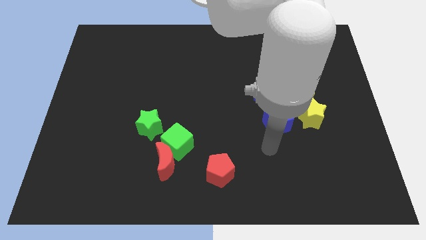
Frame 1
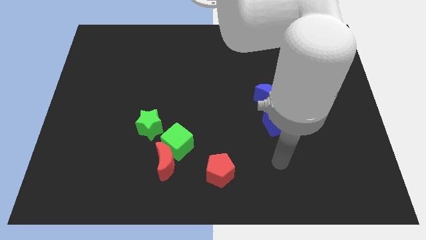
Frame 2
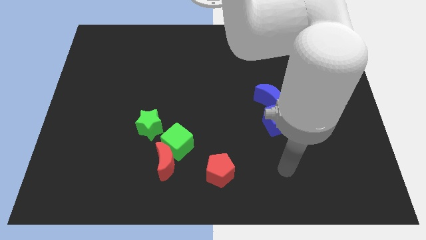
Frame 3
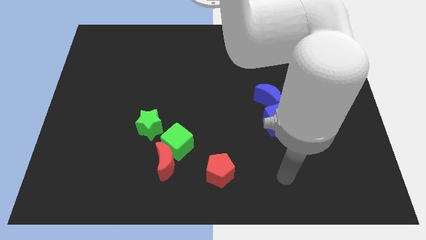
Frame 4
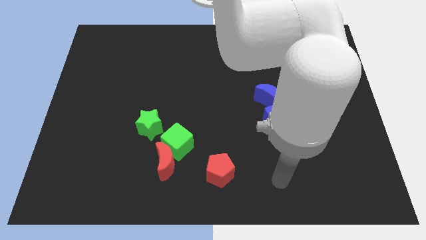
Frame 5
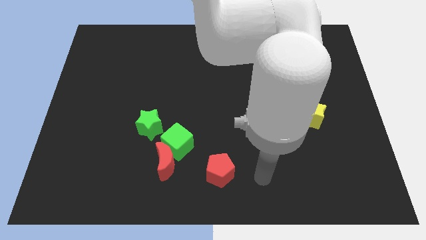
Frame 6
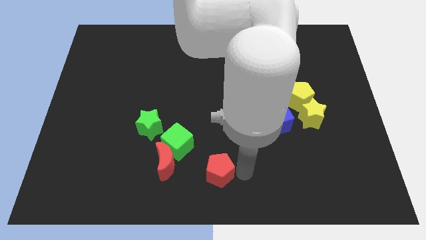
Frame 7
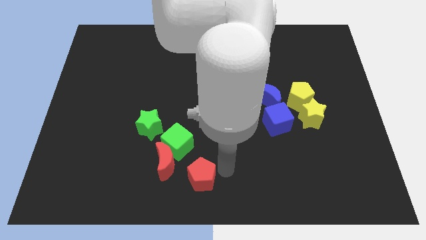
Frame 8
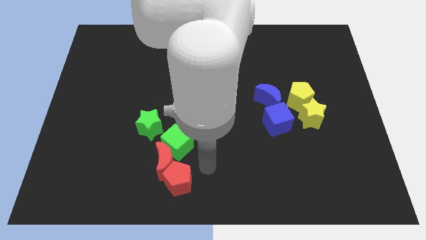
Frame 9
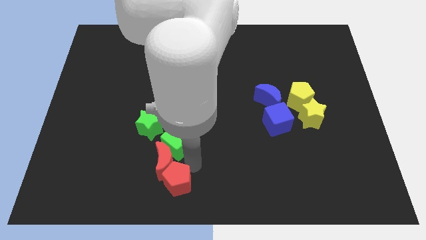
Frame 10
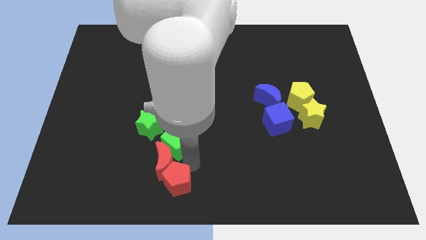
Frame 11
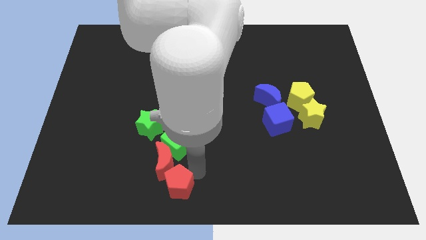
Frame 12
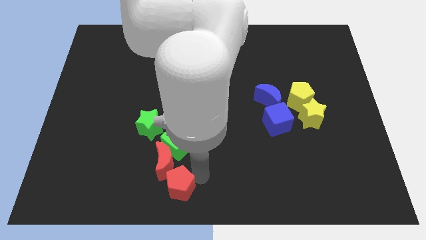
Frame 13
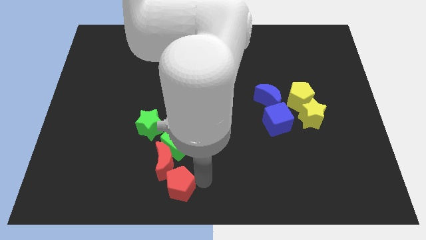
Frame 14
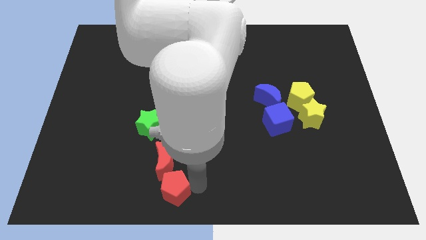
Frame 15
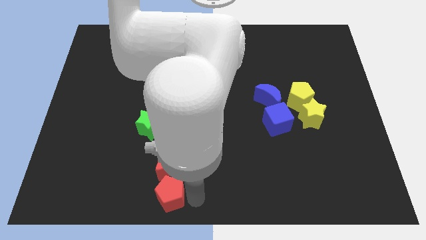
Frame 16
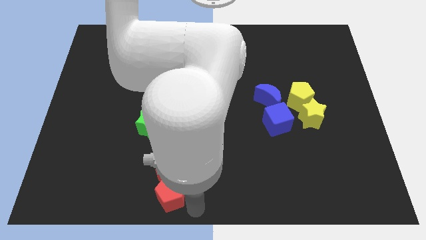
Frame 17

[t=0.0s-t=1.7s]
push the red pentagon towards the red moon

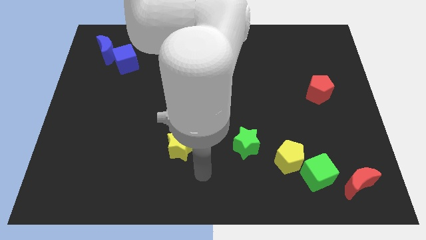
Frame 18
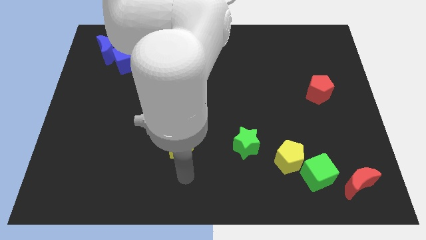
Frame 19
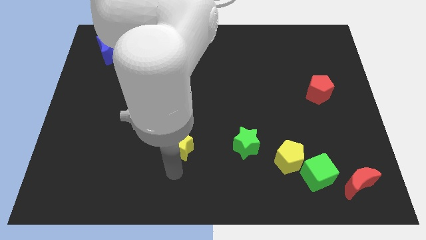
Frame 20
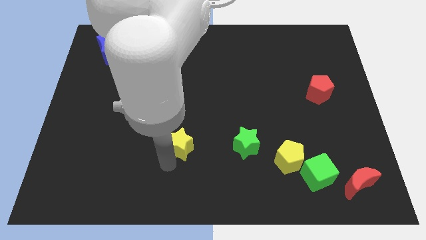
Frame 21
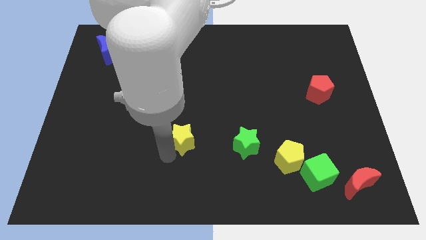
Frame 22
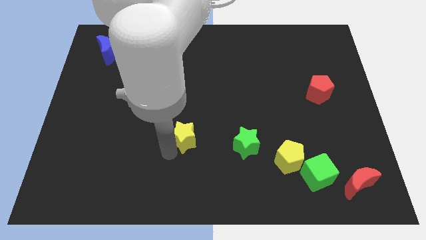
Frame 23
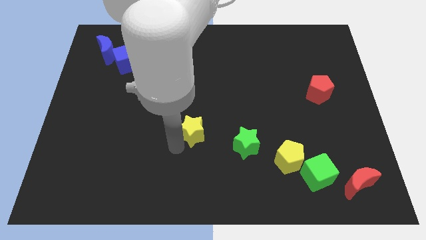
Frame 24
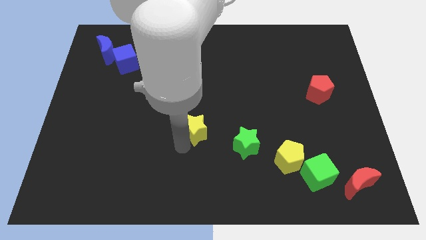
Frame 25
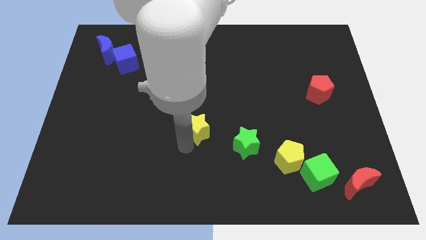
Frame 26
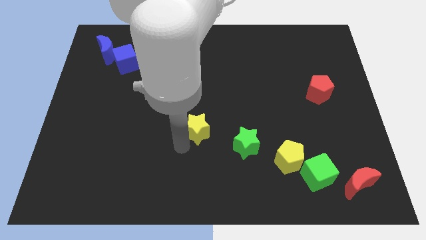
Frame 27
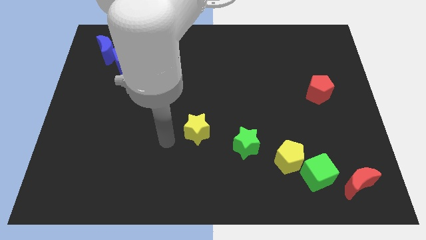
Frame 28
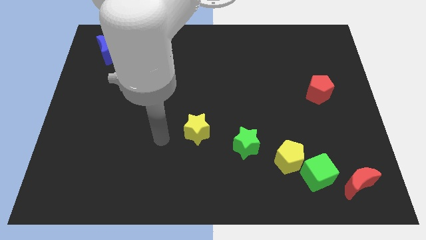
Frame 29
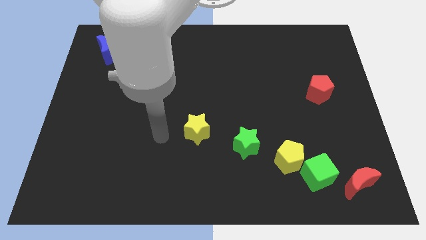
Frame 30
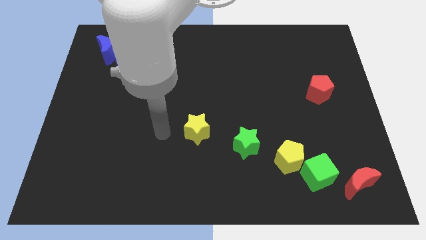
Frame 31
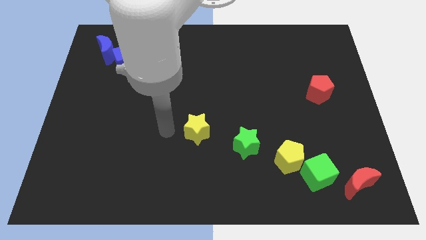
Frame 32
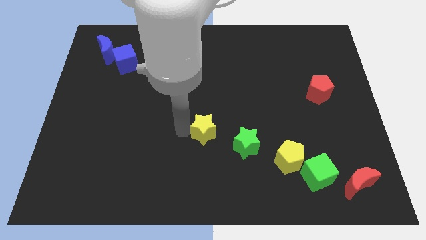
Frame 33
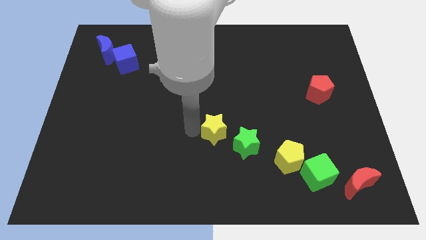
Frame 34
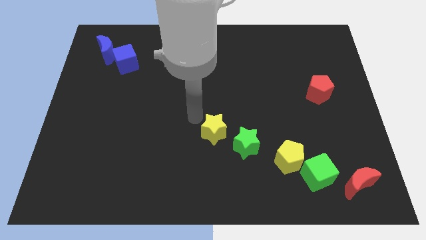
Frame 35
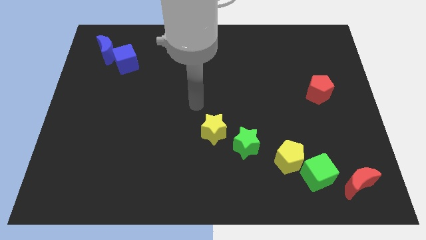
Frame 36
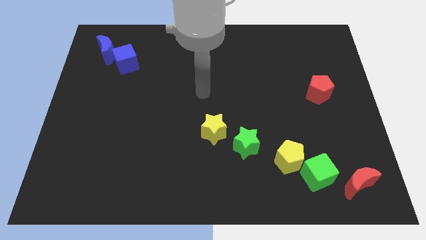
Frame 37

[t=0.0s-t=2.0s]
place the yellow star to the center of the board

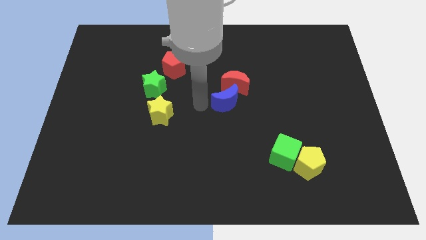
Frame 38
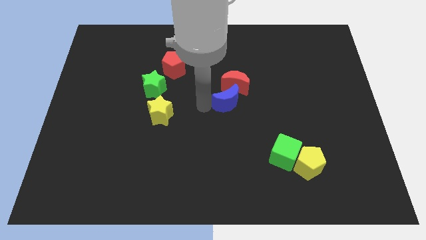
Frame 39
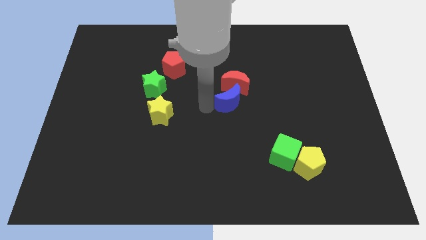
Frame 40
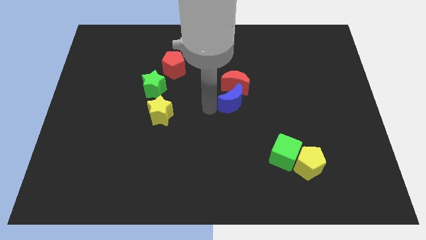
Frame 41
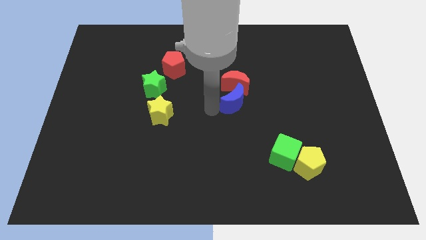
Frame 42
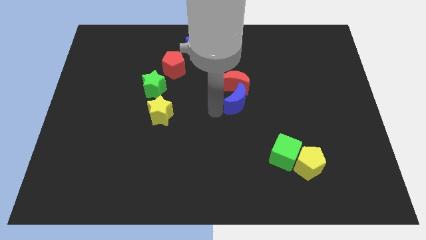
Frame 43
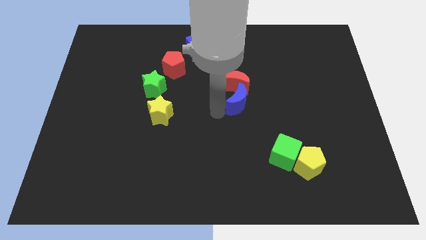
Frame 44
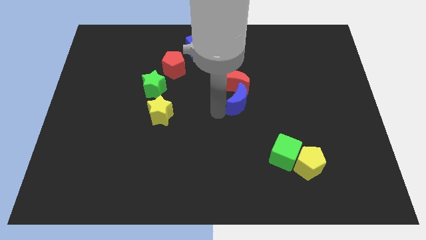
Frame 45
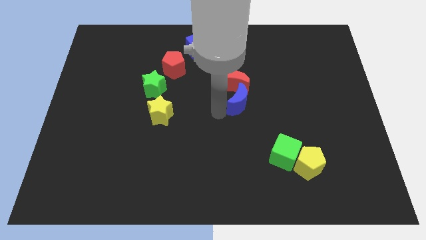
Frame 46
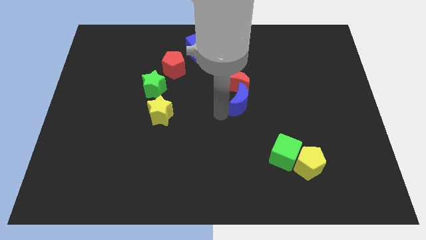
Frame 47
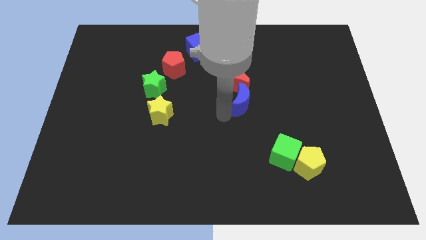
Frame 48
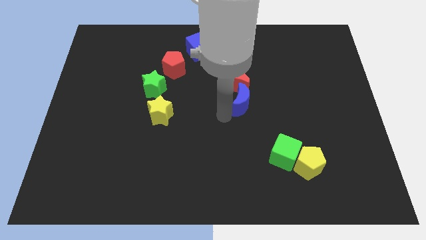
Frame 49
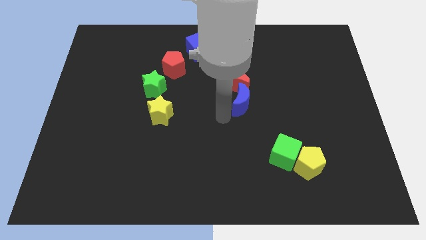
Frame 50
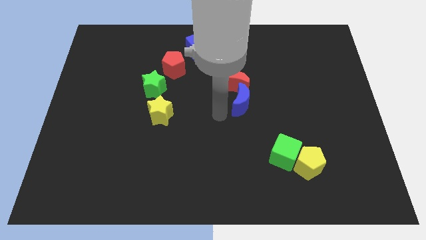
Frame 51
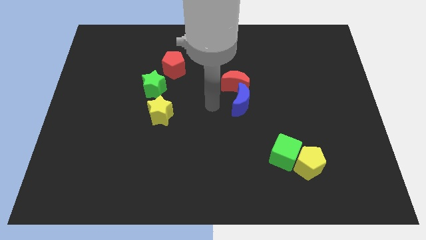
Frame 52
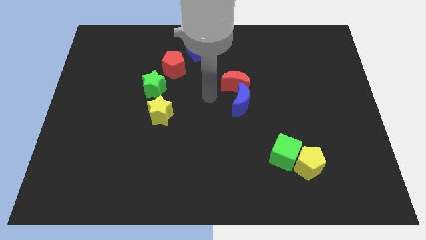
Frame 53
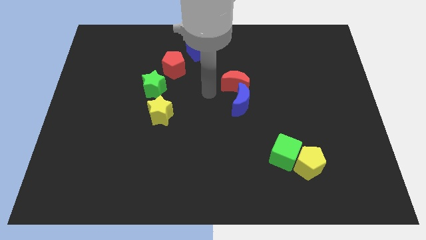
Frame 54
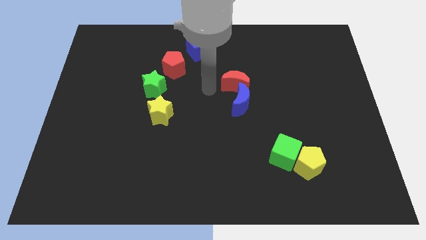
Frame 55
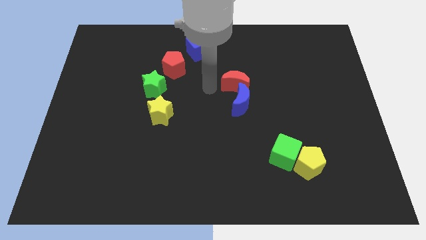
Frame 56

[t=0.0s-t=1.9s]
move the blue crescent to the right

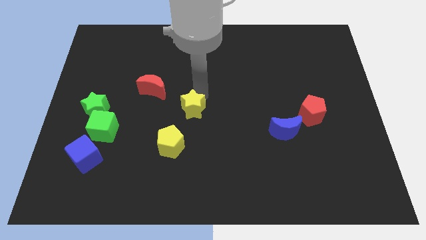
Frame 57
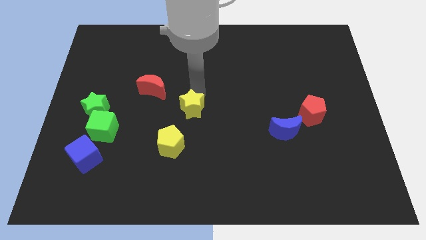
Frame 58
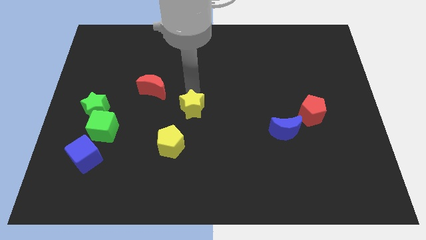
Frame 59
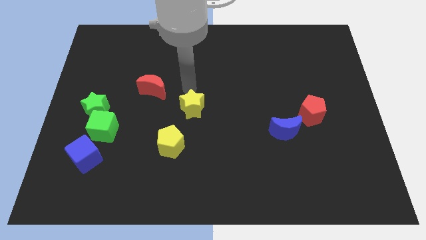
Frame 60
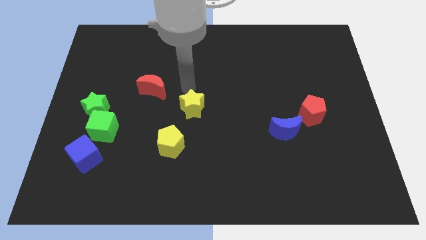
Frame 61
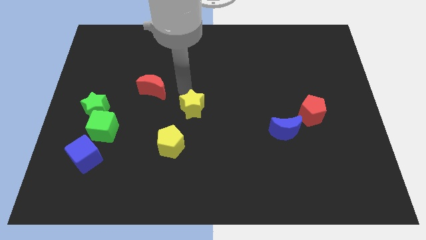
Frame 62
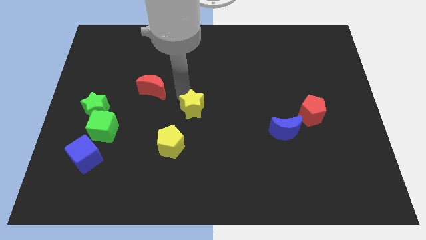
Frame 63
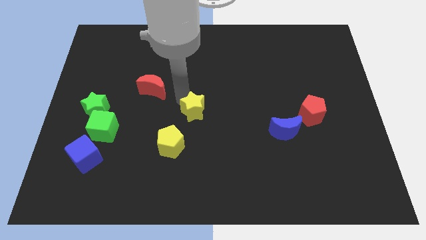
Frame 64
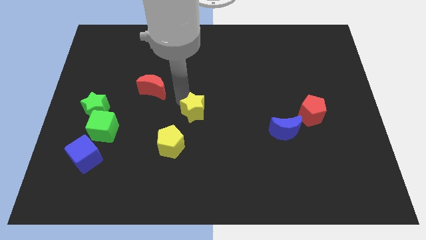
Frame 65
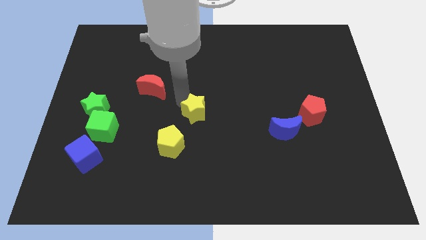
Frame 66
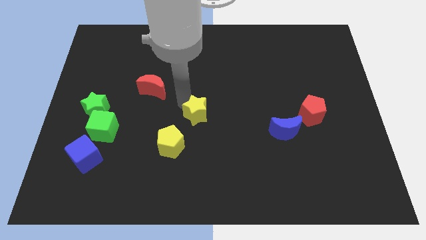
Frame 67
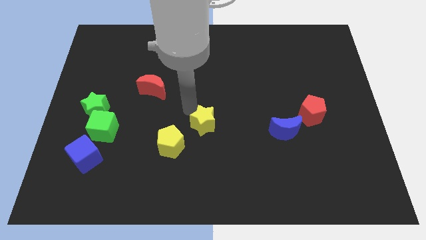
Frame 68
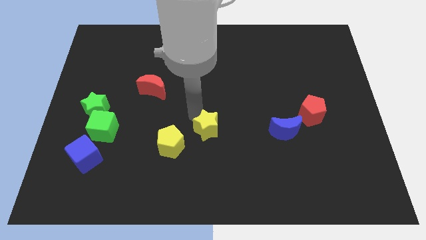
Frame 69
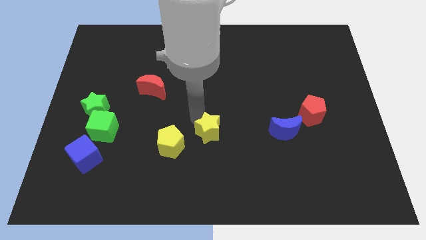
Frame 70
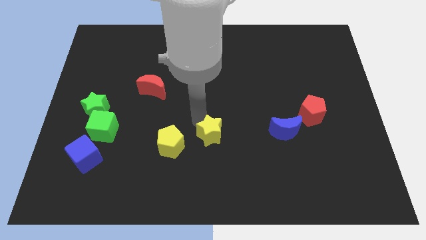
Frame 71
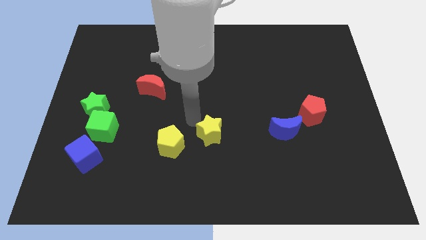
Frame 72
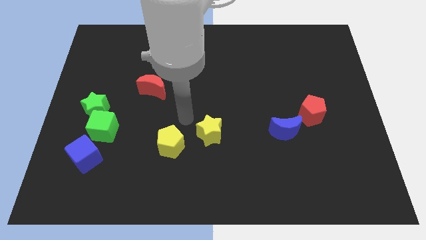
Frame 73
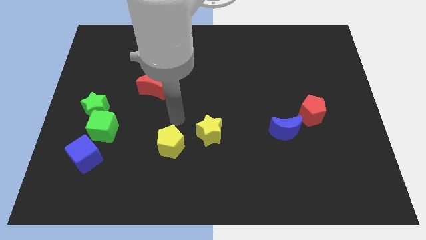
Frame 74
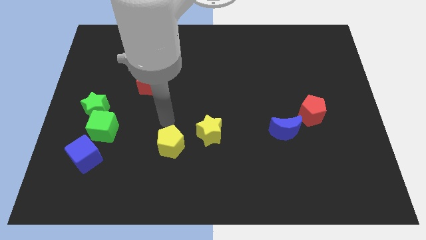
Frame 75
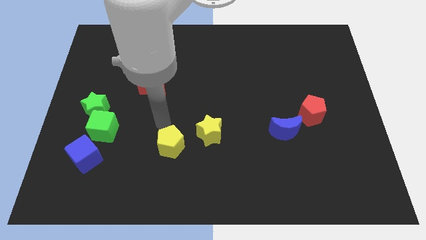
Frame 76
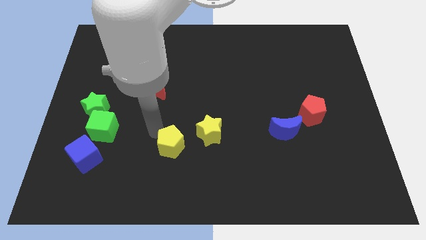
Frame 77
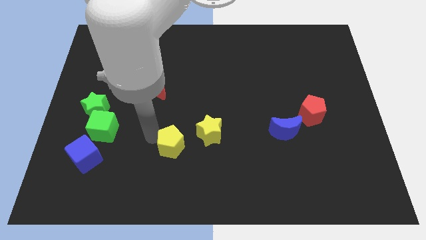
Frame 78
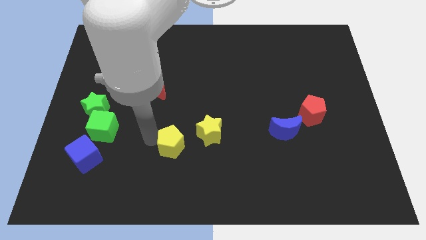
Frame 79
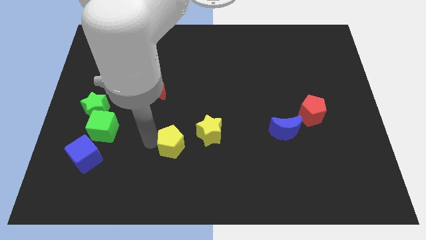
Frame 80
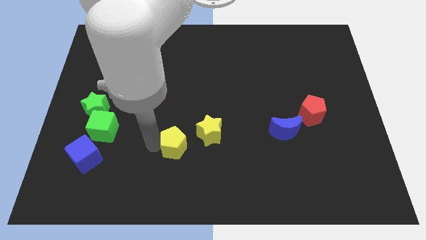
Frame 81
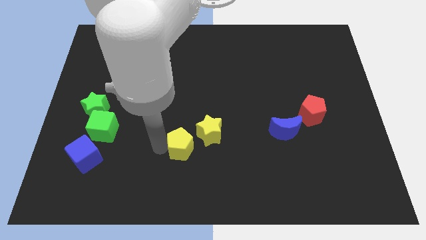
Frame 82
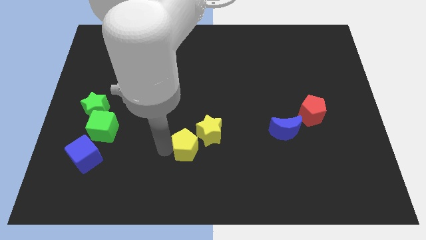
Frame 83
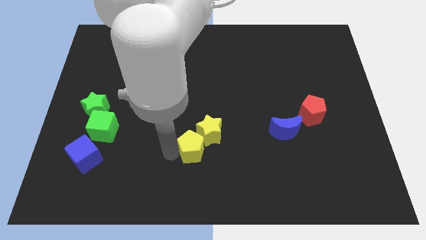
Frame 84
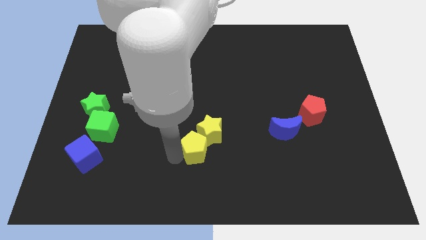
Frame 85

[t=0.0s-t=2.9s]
group up the yellow blocks at the right side of the green cube

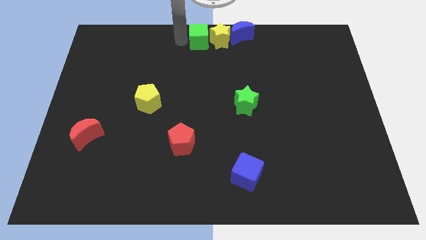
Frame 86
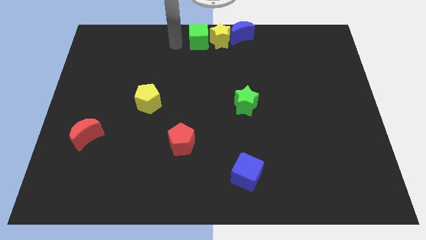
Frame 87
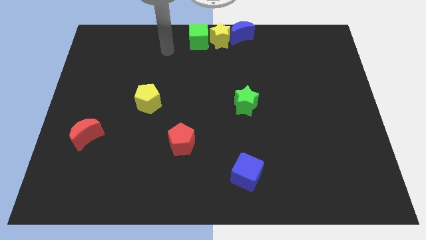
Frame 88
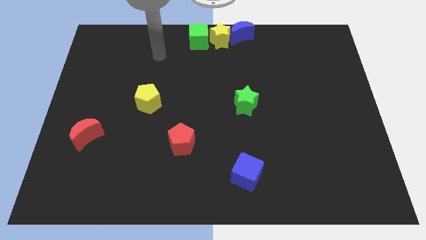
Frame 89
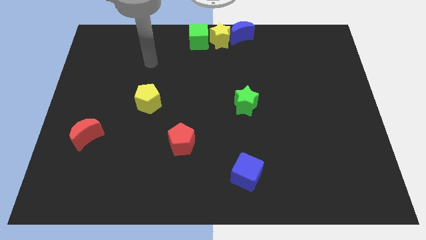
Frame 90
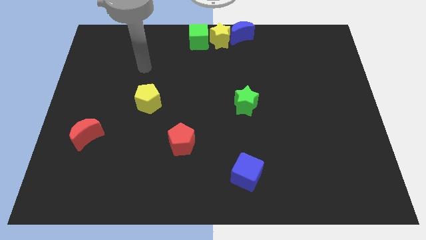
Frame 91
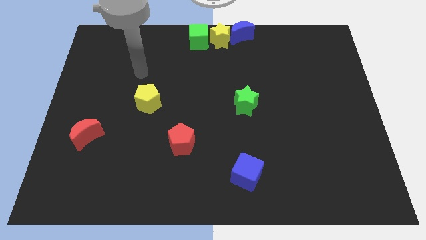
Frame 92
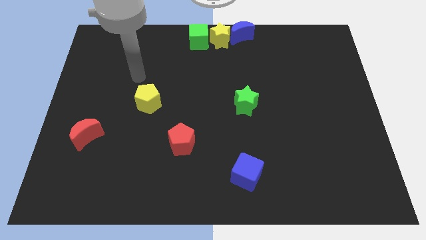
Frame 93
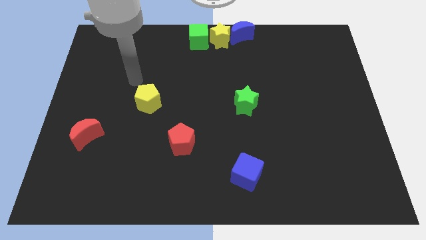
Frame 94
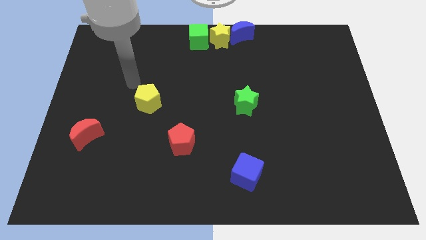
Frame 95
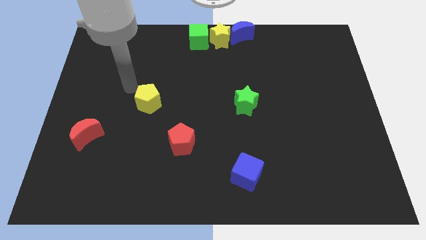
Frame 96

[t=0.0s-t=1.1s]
move your arm away from green cube
